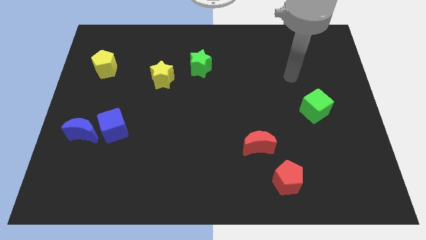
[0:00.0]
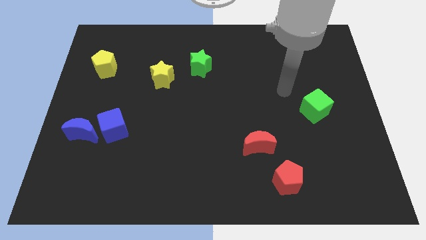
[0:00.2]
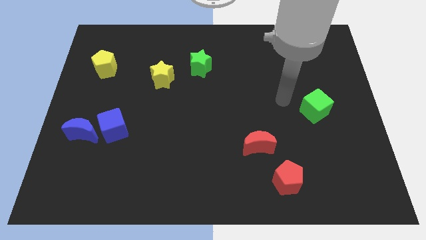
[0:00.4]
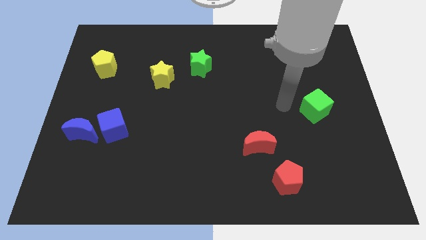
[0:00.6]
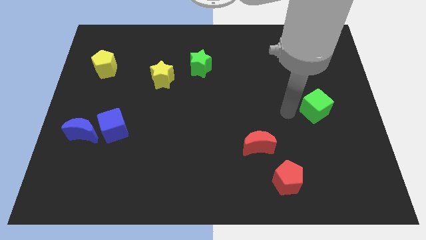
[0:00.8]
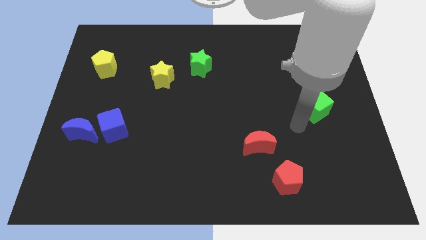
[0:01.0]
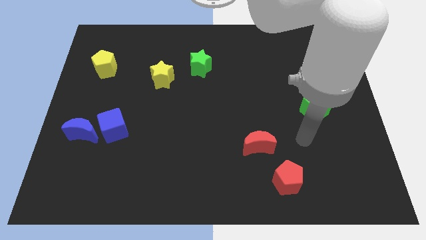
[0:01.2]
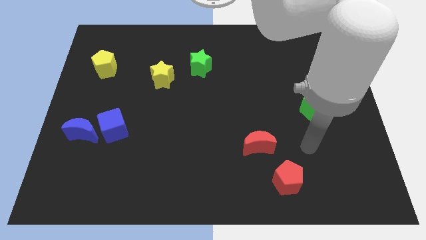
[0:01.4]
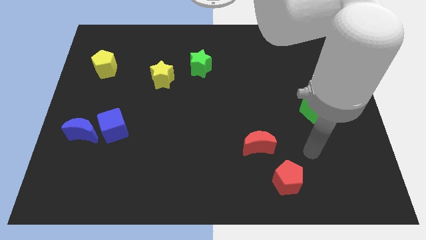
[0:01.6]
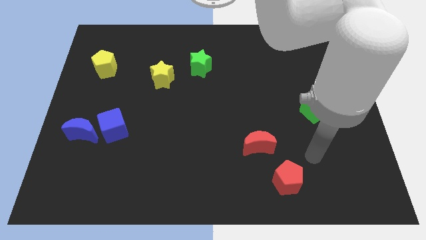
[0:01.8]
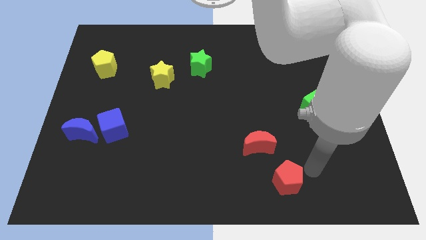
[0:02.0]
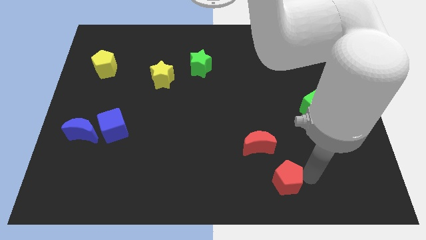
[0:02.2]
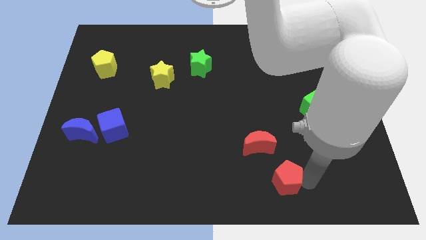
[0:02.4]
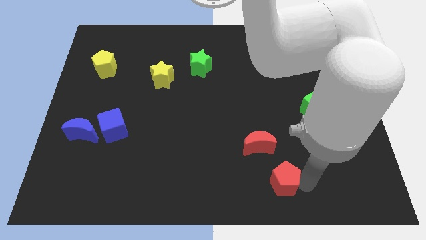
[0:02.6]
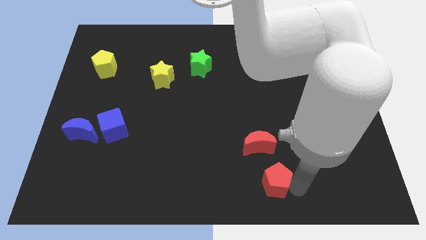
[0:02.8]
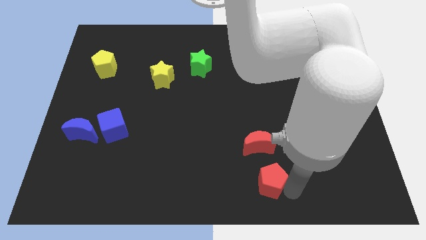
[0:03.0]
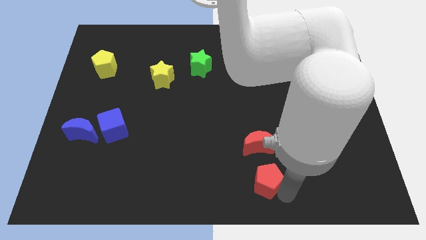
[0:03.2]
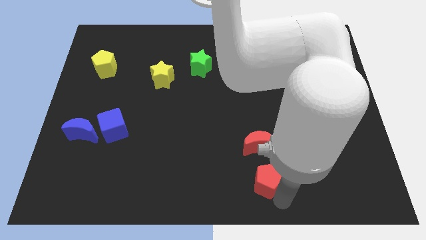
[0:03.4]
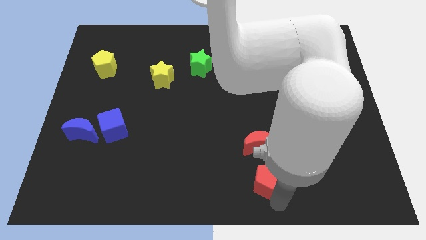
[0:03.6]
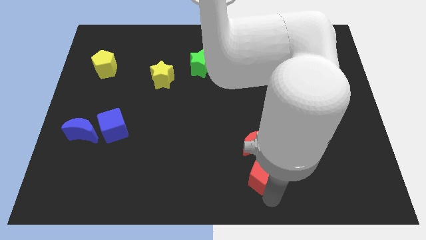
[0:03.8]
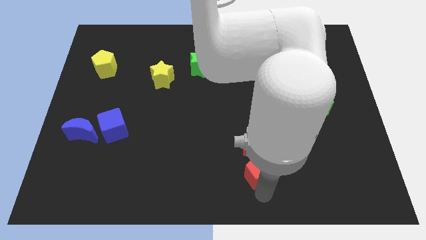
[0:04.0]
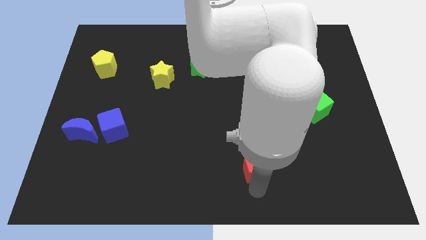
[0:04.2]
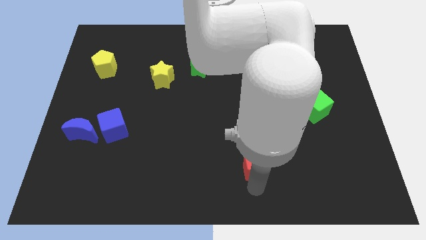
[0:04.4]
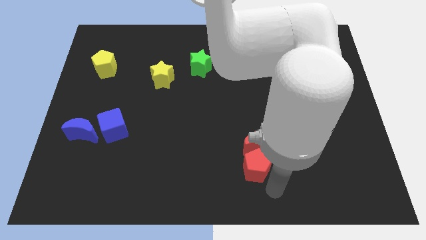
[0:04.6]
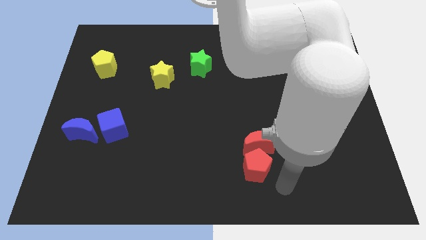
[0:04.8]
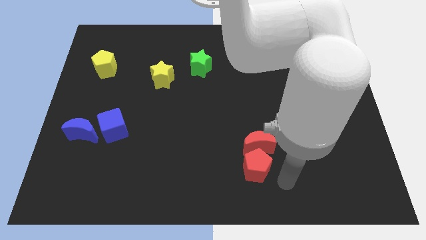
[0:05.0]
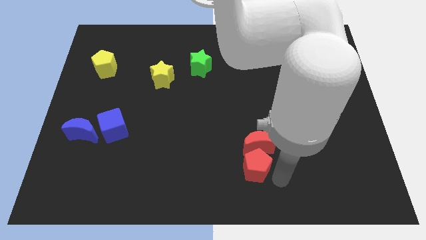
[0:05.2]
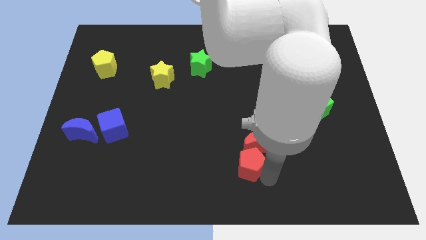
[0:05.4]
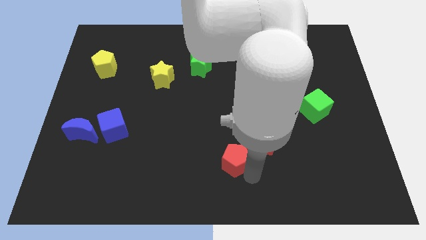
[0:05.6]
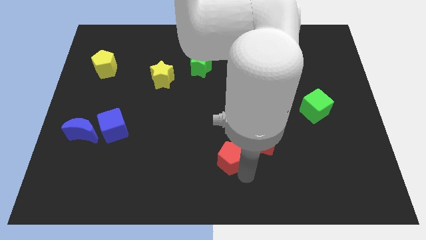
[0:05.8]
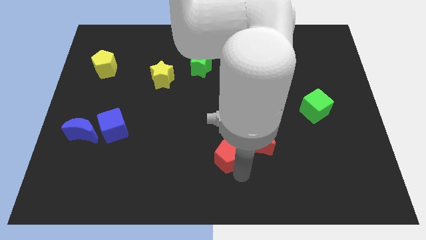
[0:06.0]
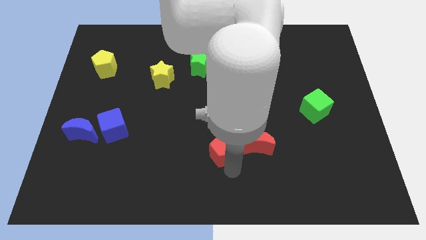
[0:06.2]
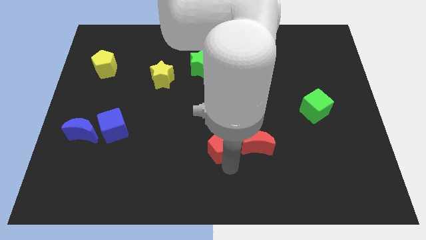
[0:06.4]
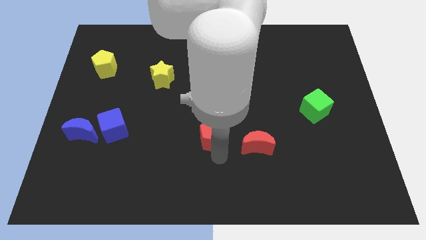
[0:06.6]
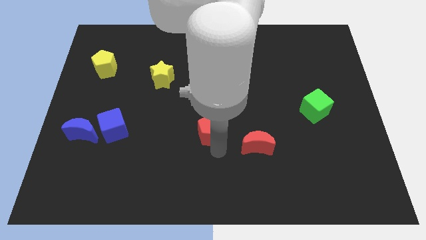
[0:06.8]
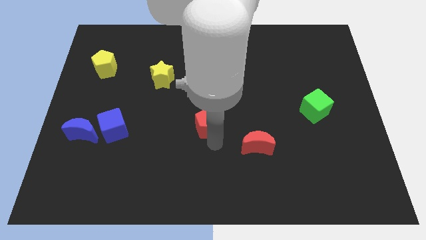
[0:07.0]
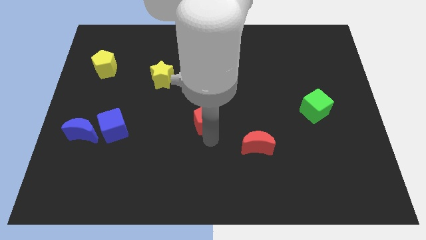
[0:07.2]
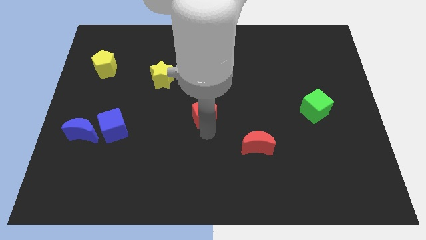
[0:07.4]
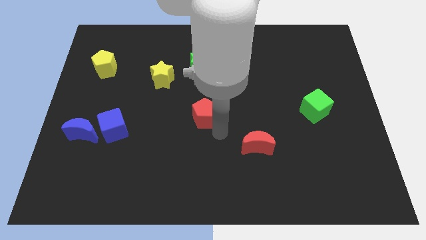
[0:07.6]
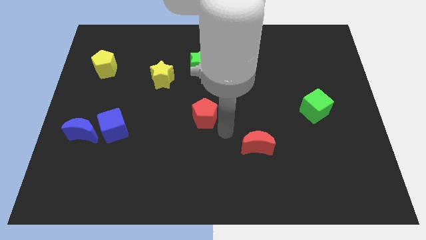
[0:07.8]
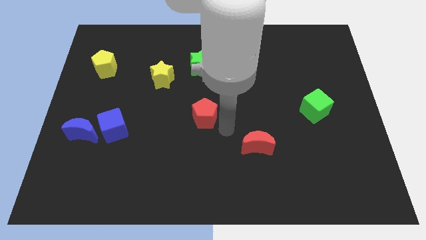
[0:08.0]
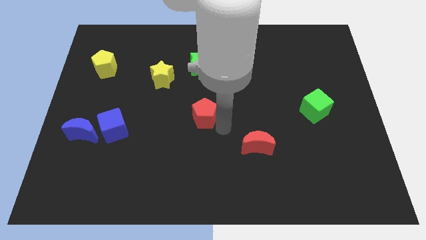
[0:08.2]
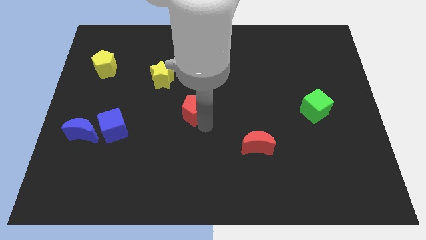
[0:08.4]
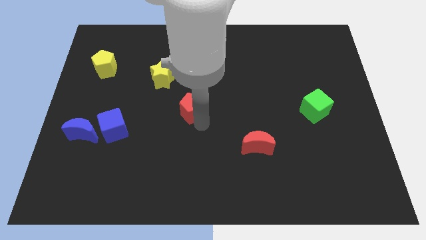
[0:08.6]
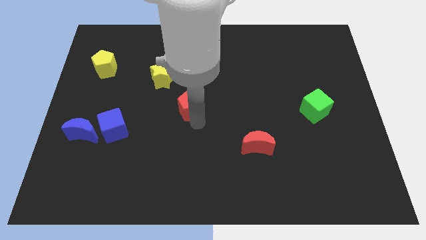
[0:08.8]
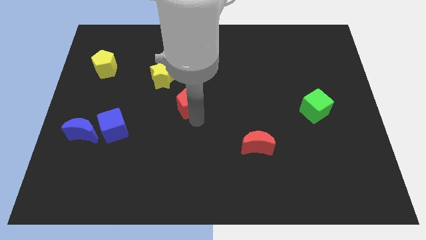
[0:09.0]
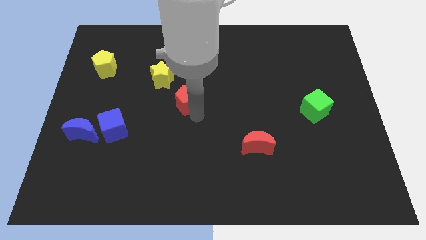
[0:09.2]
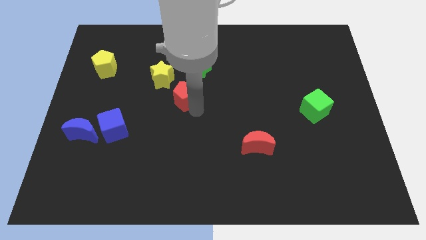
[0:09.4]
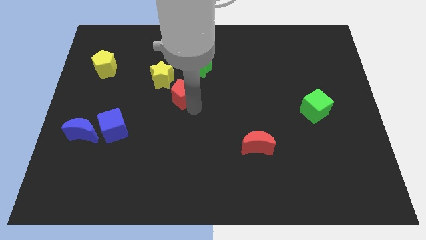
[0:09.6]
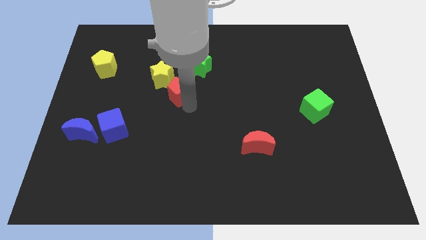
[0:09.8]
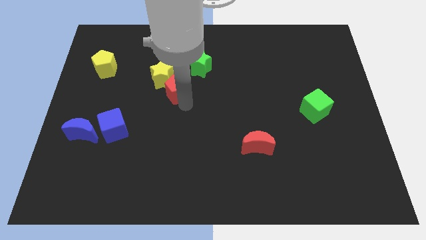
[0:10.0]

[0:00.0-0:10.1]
put the red pentagon towards the yellow star

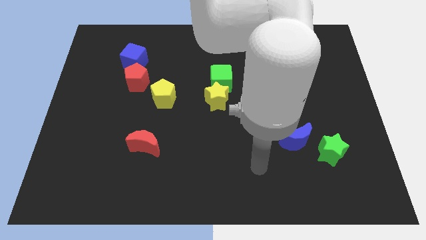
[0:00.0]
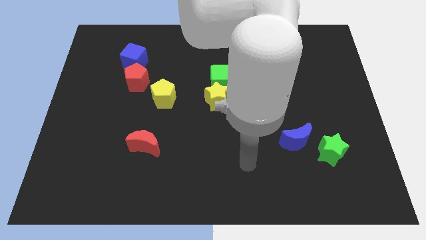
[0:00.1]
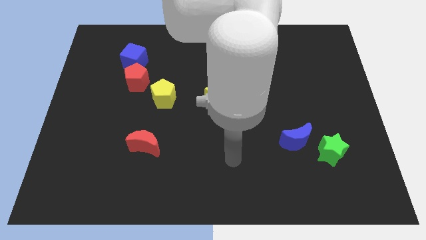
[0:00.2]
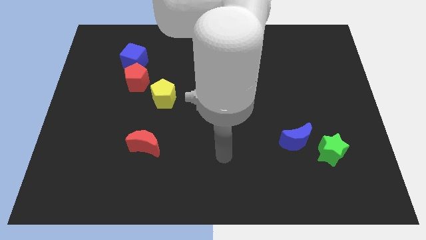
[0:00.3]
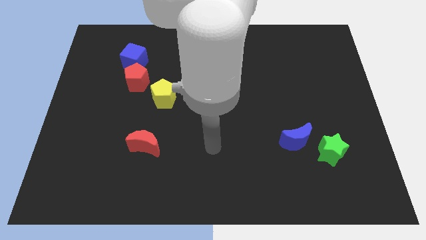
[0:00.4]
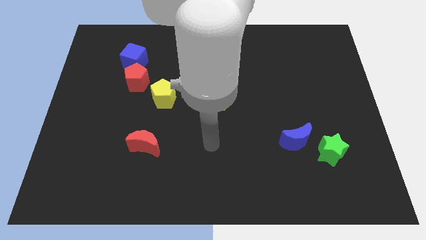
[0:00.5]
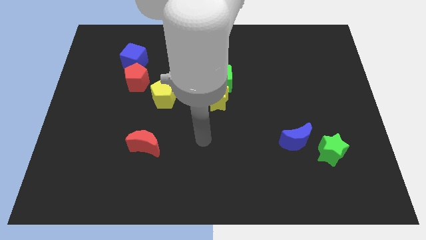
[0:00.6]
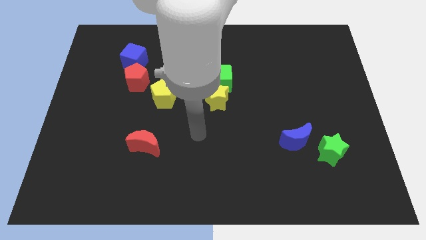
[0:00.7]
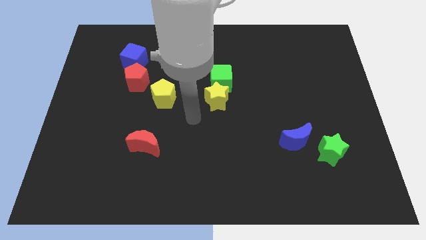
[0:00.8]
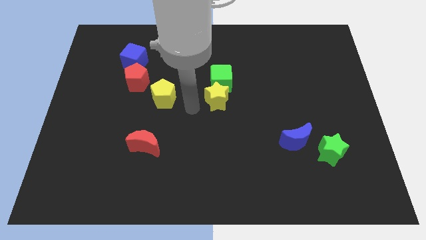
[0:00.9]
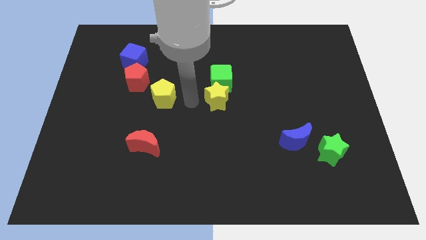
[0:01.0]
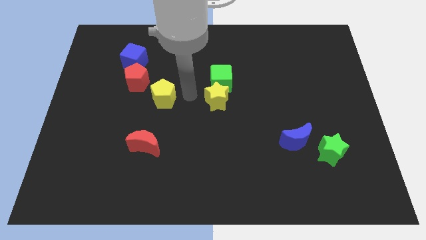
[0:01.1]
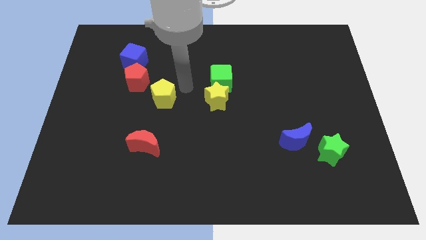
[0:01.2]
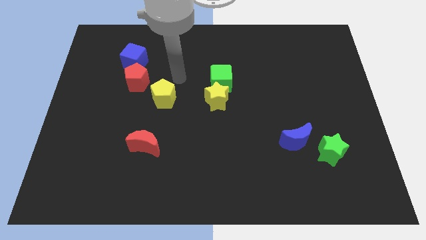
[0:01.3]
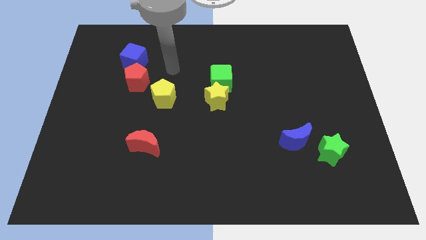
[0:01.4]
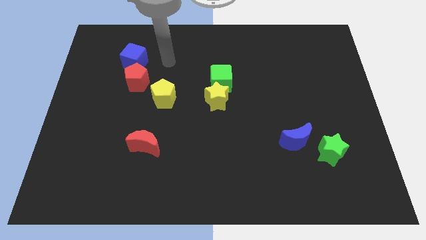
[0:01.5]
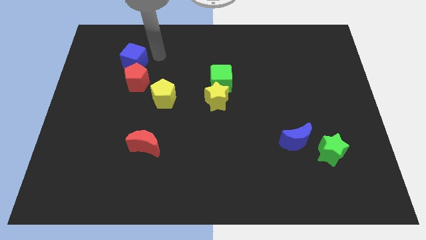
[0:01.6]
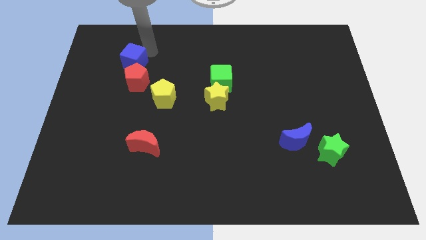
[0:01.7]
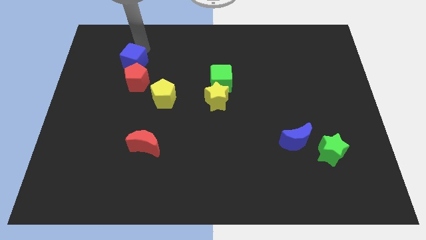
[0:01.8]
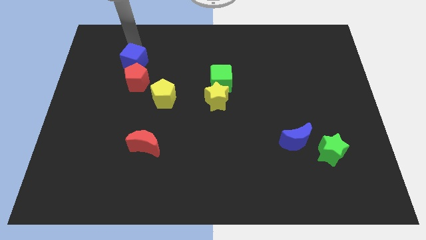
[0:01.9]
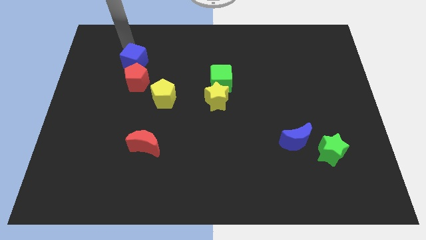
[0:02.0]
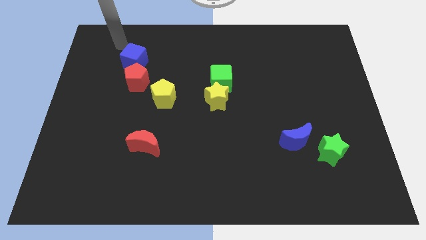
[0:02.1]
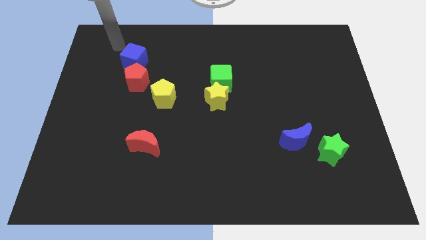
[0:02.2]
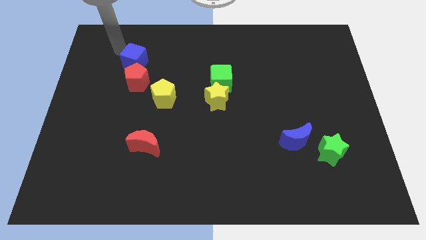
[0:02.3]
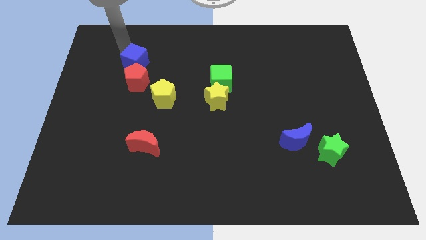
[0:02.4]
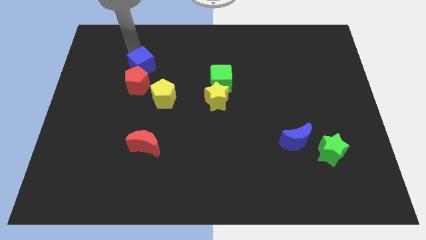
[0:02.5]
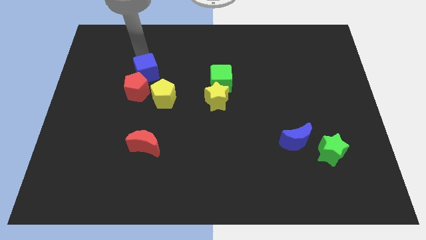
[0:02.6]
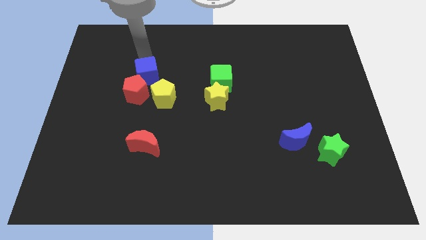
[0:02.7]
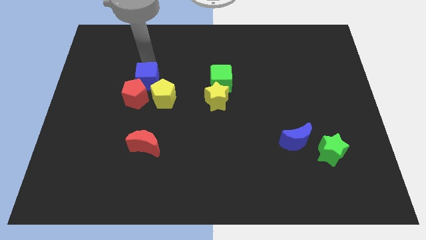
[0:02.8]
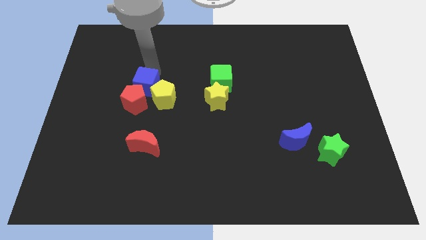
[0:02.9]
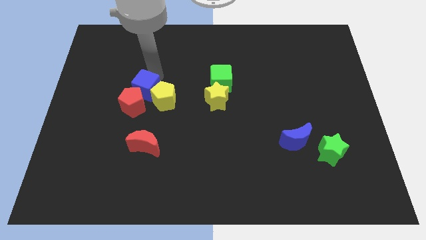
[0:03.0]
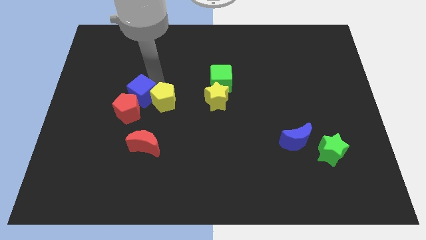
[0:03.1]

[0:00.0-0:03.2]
put the blue cube to the yellow pentagon
